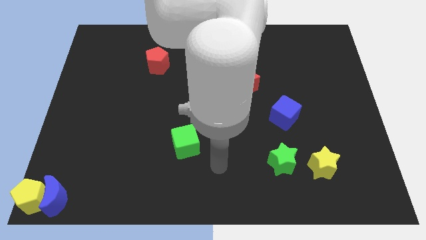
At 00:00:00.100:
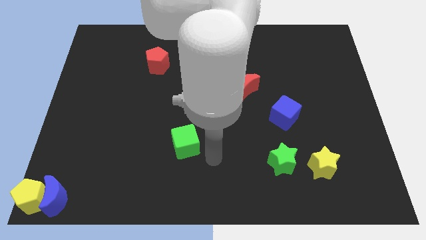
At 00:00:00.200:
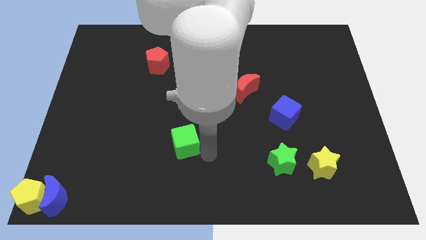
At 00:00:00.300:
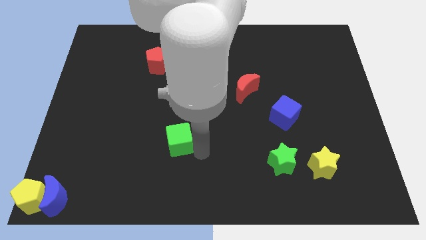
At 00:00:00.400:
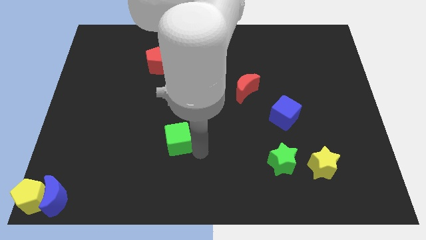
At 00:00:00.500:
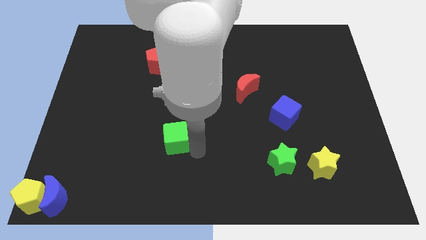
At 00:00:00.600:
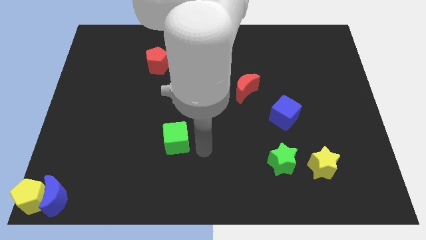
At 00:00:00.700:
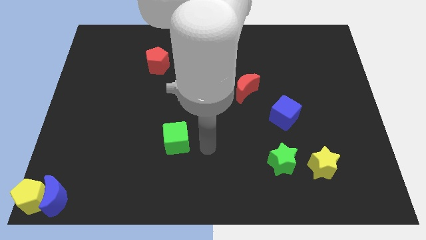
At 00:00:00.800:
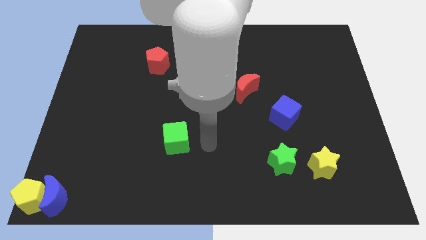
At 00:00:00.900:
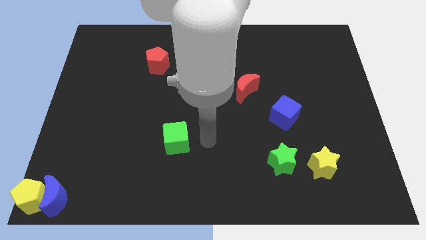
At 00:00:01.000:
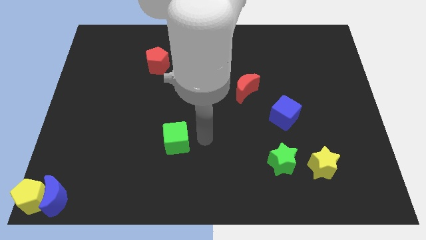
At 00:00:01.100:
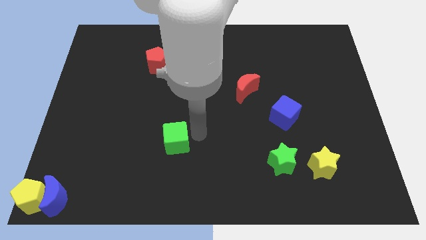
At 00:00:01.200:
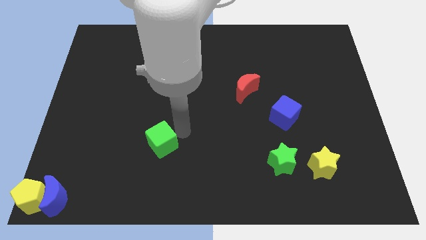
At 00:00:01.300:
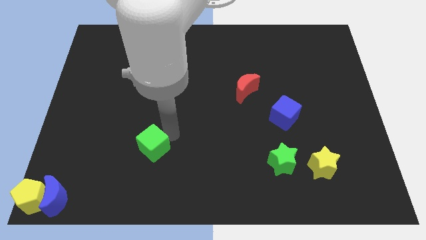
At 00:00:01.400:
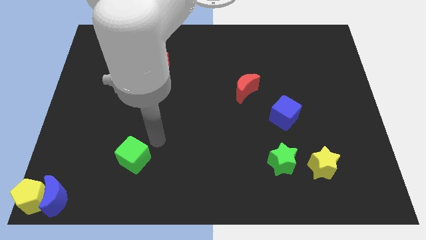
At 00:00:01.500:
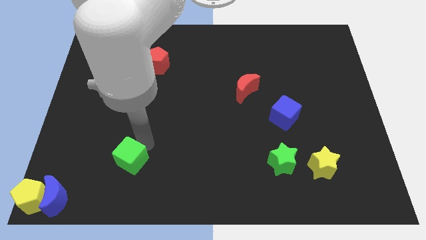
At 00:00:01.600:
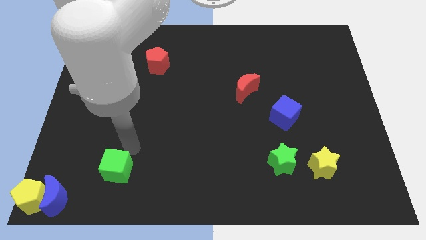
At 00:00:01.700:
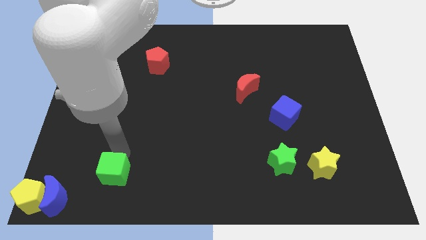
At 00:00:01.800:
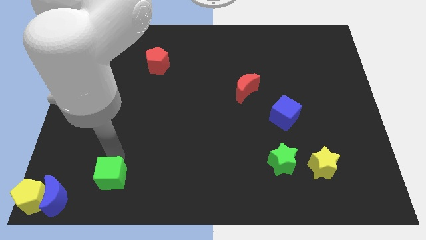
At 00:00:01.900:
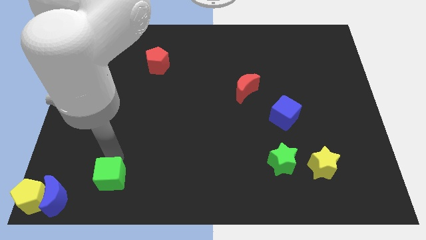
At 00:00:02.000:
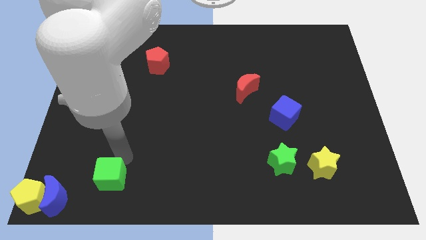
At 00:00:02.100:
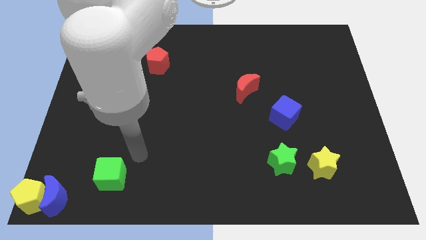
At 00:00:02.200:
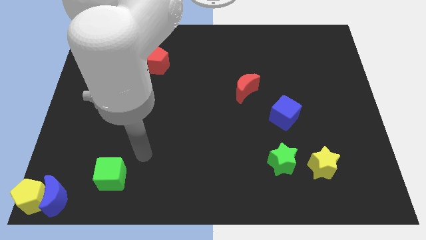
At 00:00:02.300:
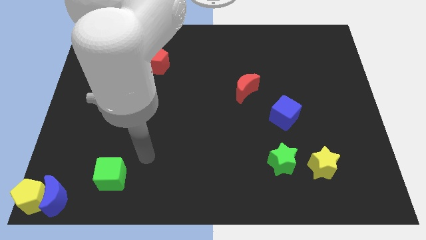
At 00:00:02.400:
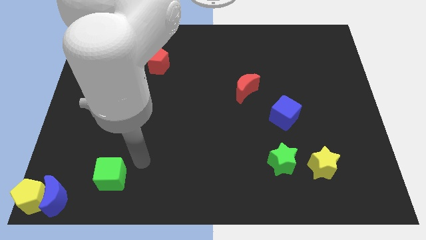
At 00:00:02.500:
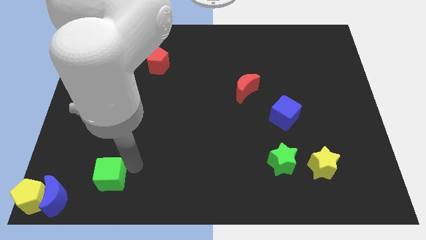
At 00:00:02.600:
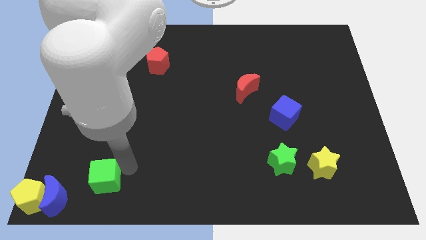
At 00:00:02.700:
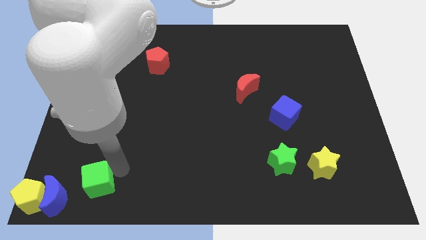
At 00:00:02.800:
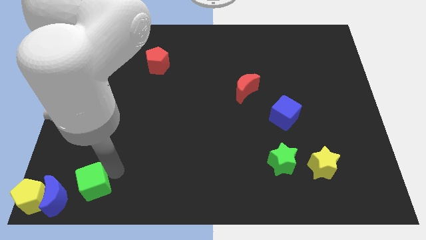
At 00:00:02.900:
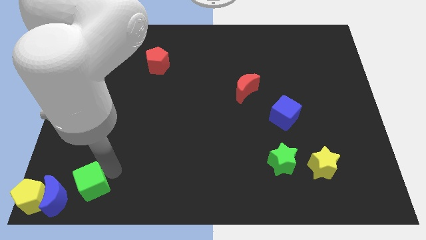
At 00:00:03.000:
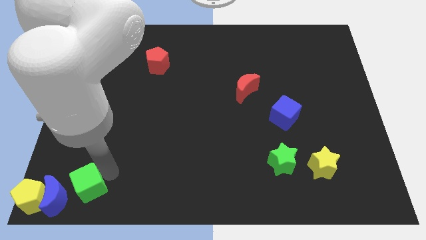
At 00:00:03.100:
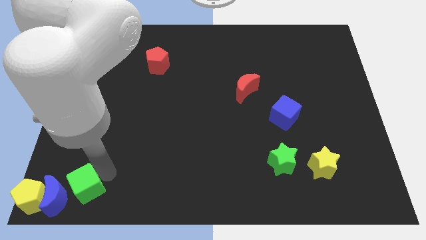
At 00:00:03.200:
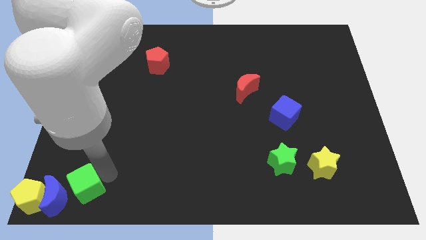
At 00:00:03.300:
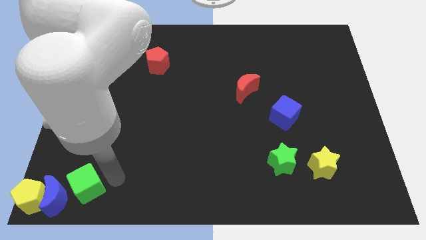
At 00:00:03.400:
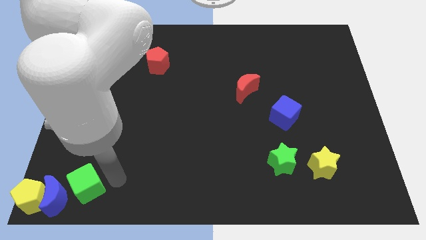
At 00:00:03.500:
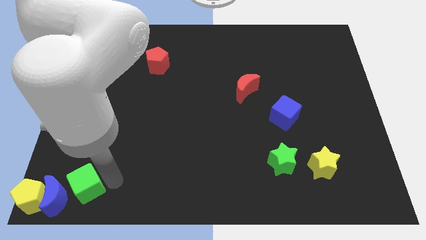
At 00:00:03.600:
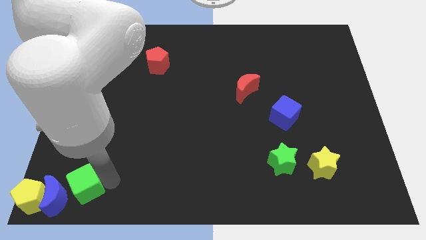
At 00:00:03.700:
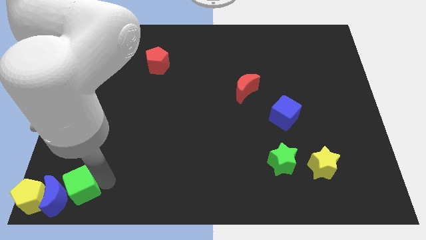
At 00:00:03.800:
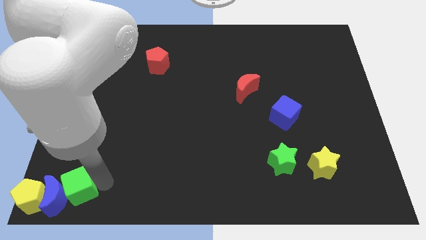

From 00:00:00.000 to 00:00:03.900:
move green cube to the top right of blue moon

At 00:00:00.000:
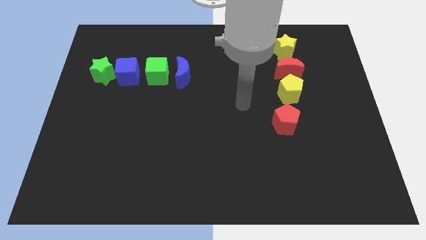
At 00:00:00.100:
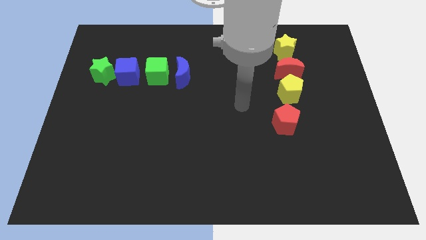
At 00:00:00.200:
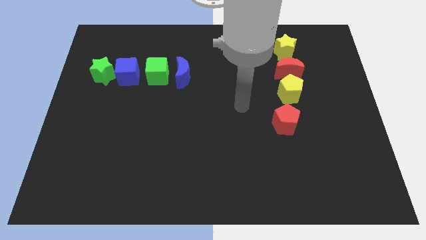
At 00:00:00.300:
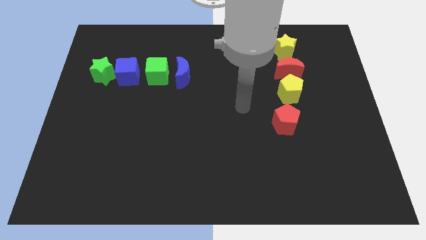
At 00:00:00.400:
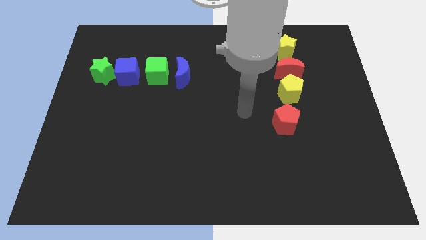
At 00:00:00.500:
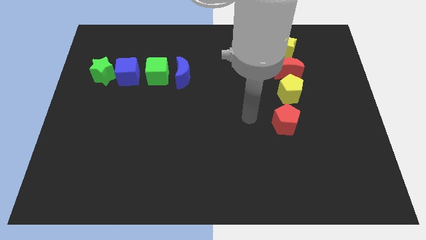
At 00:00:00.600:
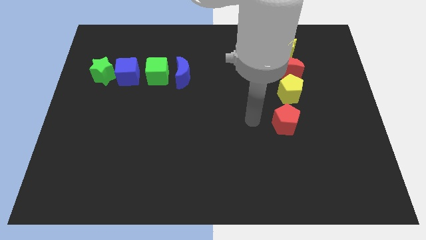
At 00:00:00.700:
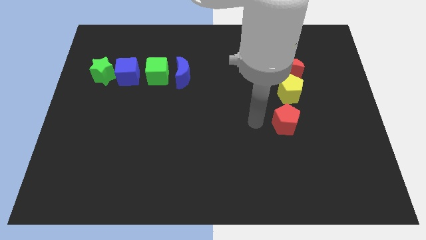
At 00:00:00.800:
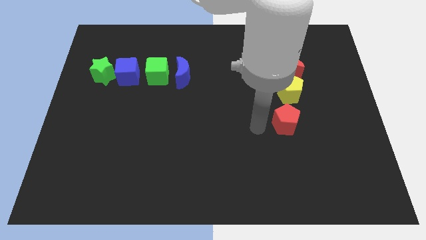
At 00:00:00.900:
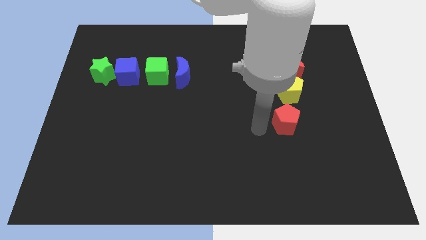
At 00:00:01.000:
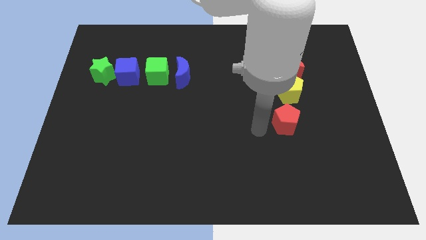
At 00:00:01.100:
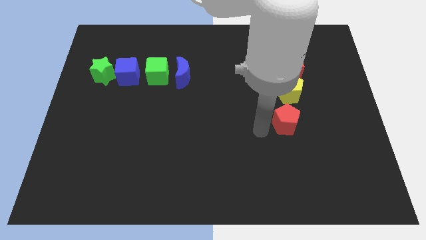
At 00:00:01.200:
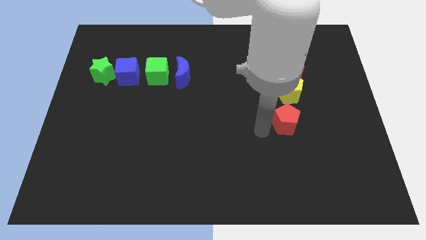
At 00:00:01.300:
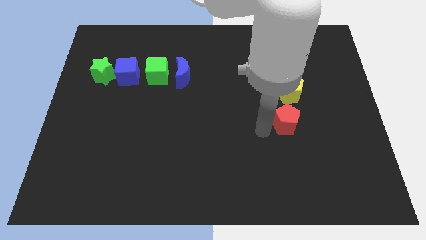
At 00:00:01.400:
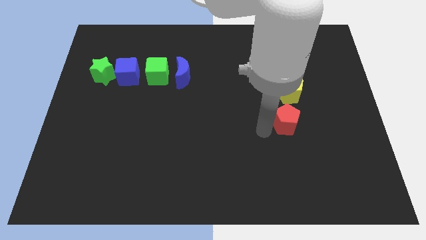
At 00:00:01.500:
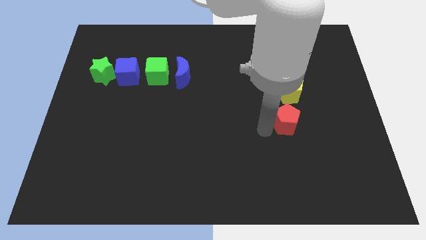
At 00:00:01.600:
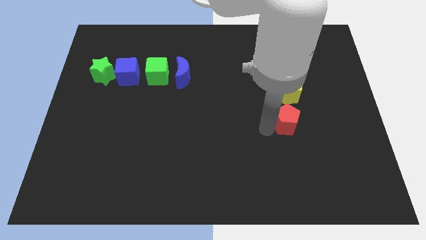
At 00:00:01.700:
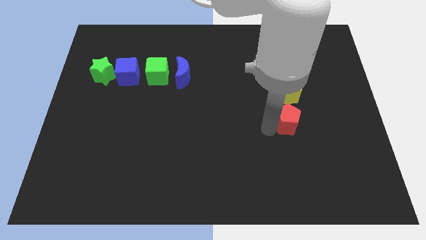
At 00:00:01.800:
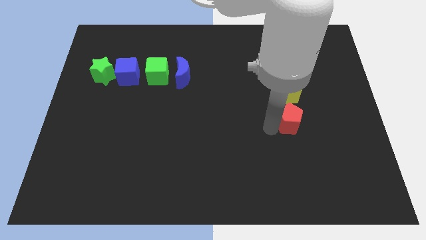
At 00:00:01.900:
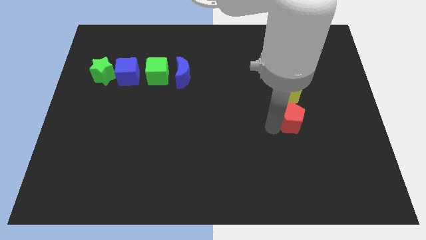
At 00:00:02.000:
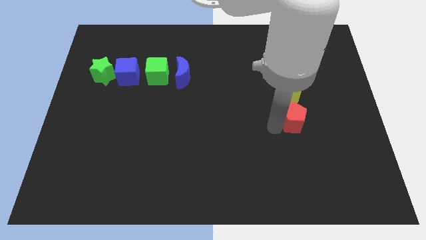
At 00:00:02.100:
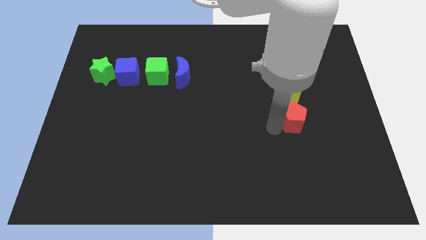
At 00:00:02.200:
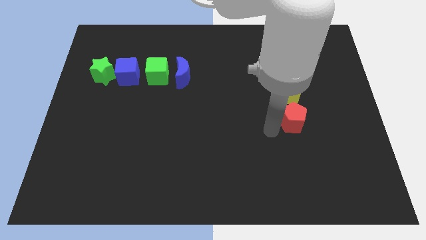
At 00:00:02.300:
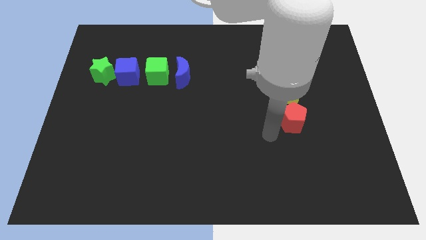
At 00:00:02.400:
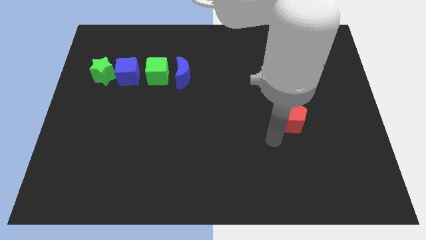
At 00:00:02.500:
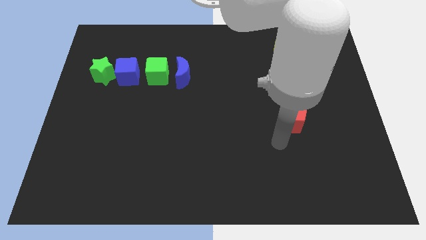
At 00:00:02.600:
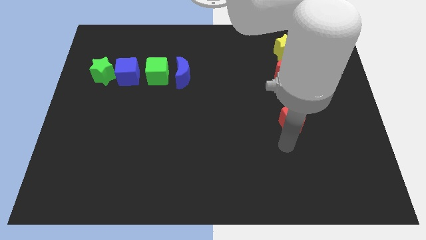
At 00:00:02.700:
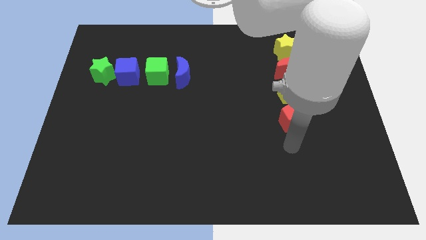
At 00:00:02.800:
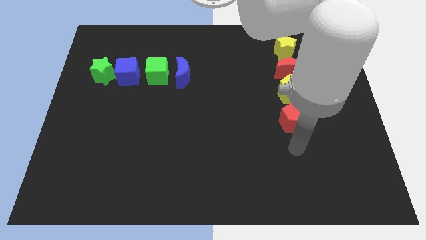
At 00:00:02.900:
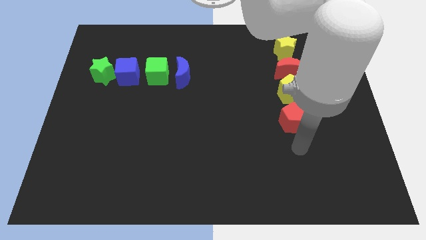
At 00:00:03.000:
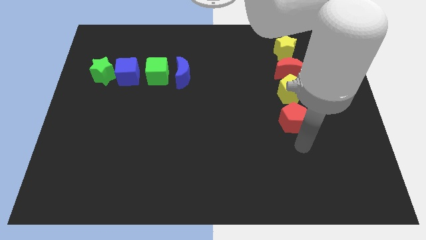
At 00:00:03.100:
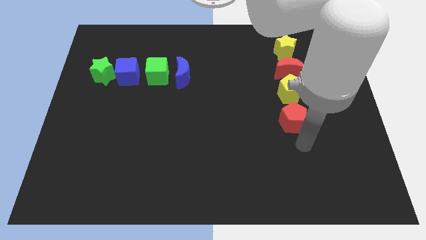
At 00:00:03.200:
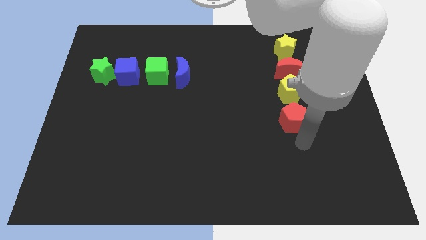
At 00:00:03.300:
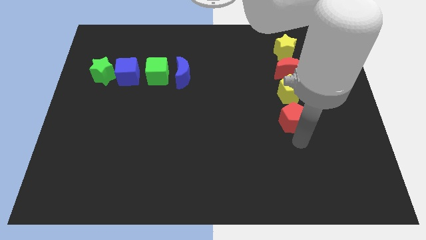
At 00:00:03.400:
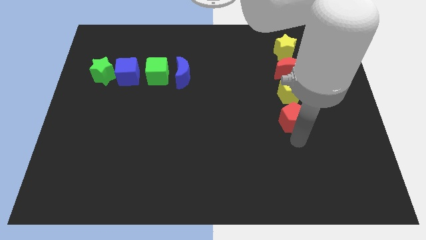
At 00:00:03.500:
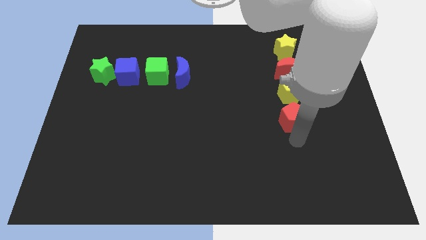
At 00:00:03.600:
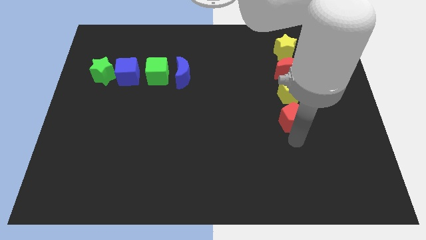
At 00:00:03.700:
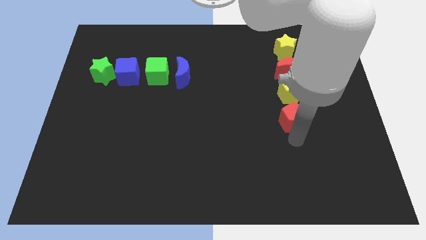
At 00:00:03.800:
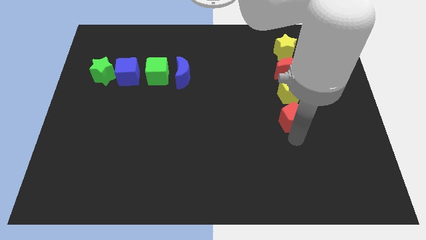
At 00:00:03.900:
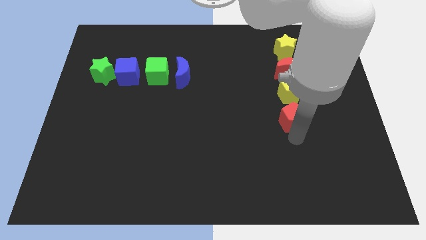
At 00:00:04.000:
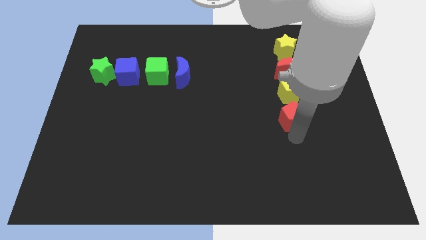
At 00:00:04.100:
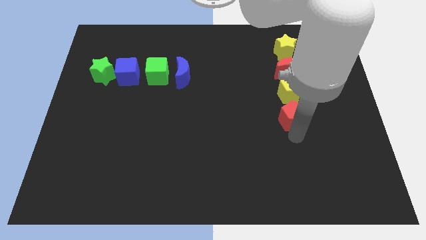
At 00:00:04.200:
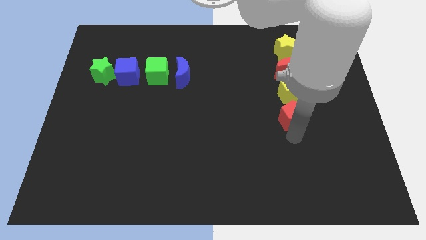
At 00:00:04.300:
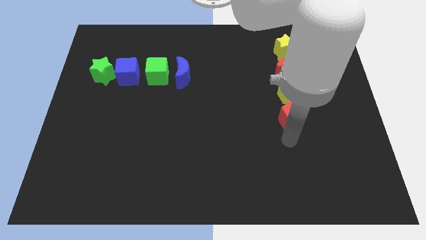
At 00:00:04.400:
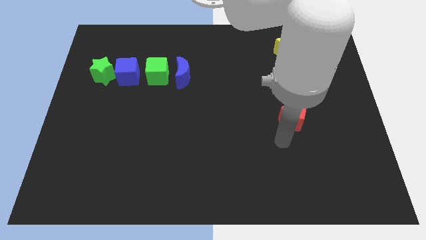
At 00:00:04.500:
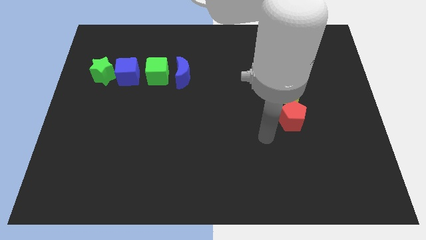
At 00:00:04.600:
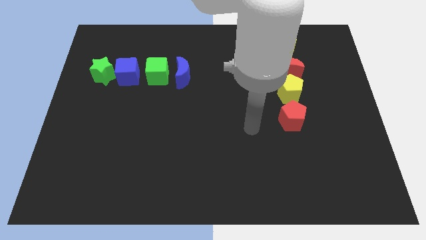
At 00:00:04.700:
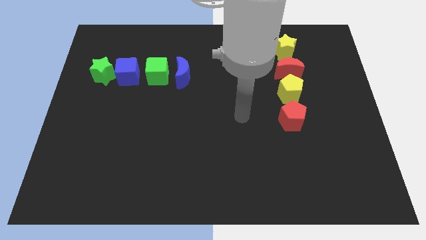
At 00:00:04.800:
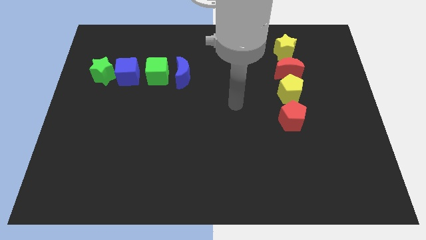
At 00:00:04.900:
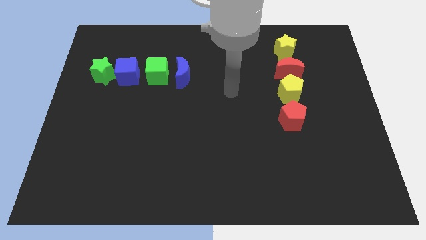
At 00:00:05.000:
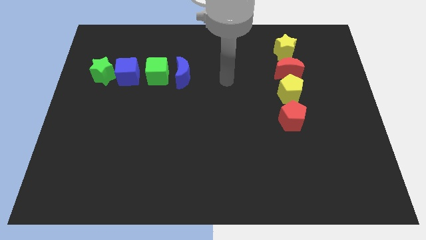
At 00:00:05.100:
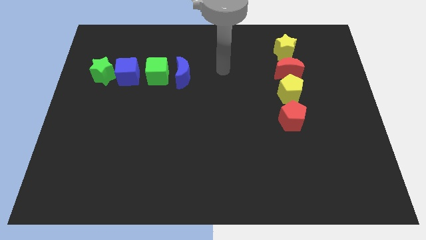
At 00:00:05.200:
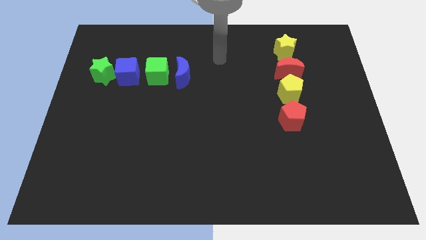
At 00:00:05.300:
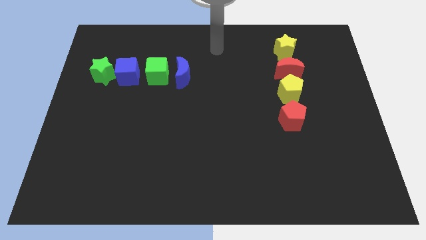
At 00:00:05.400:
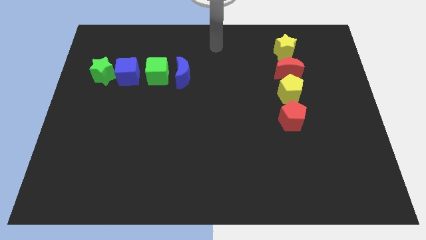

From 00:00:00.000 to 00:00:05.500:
slightly push the red pentagon to the right side
